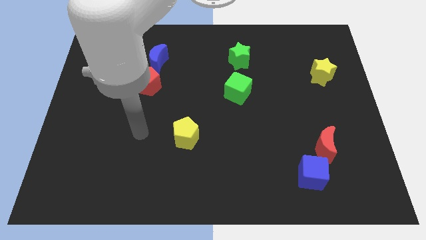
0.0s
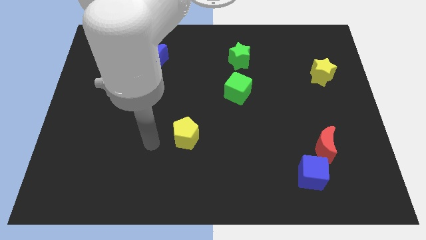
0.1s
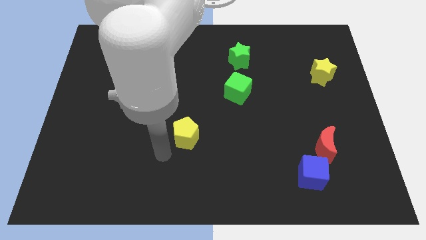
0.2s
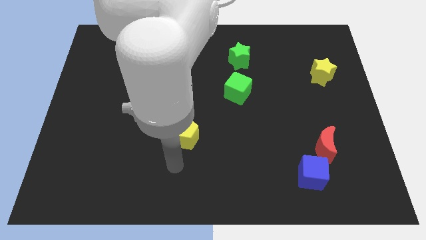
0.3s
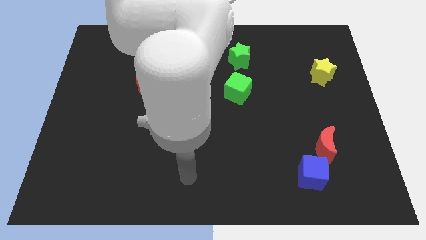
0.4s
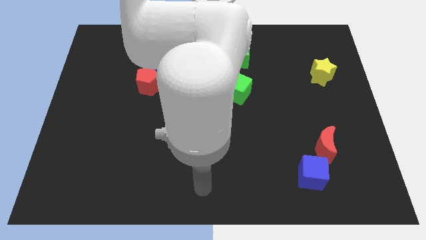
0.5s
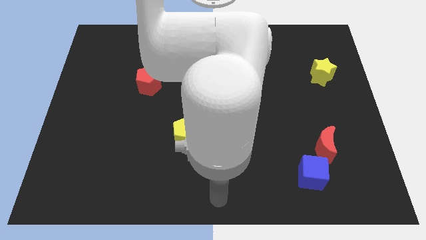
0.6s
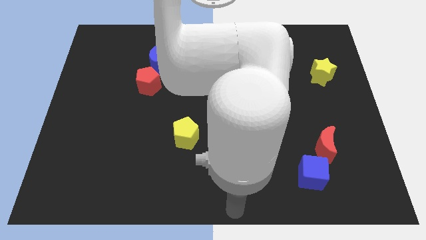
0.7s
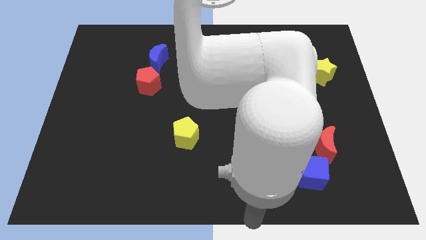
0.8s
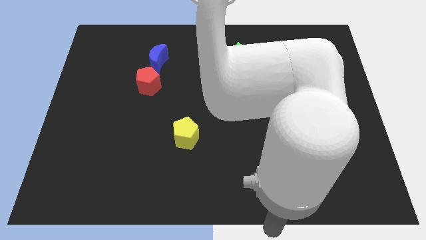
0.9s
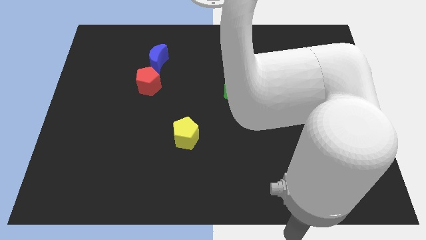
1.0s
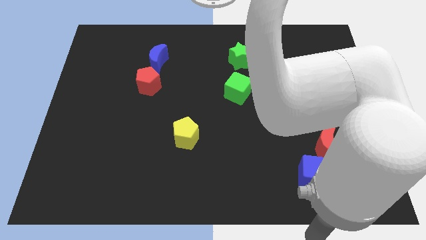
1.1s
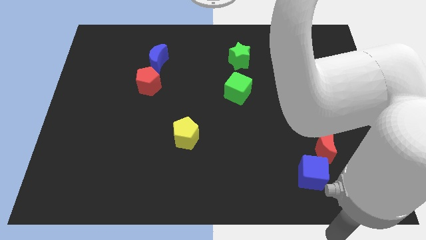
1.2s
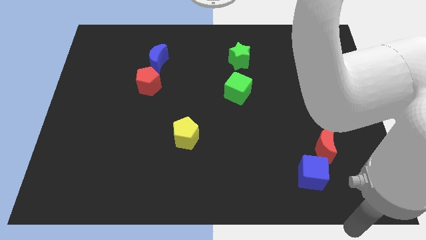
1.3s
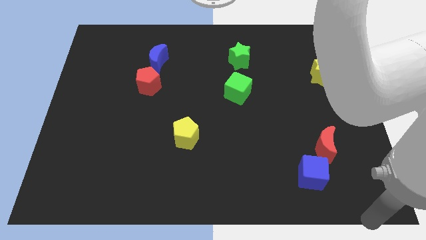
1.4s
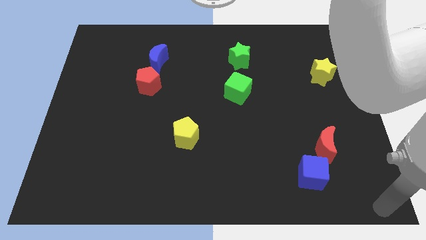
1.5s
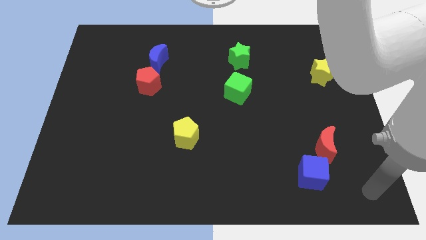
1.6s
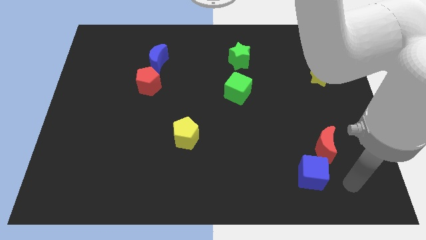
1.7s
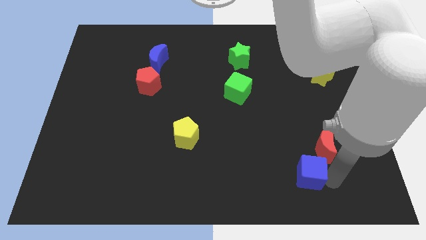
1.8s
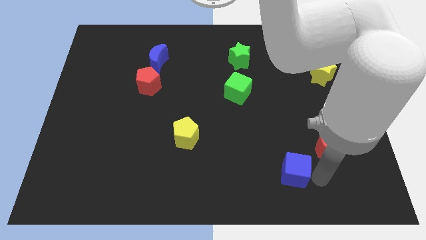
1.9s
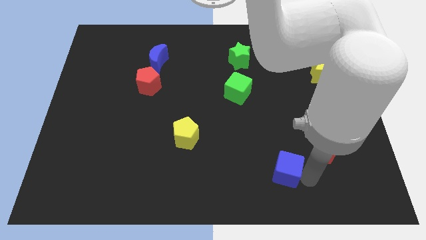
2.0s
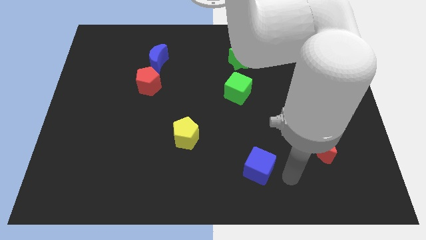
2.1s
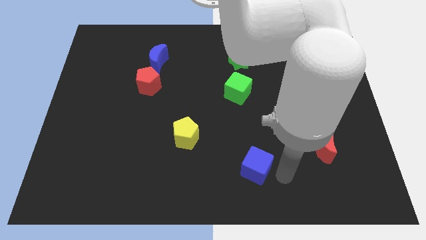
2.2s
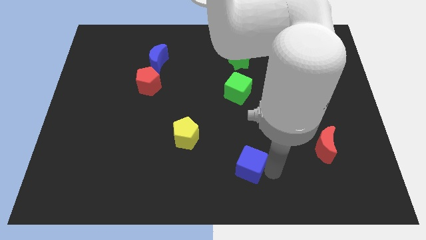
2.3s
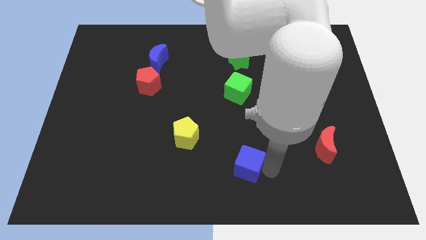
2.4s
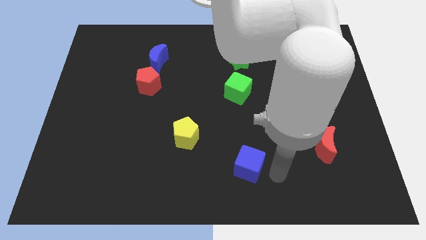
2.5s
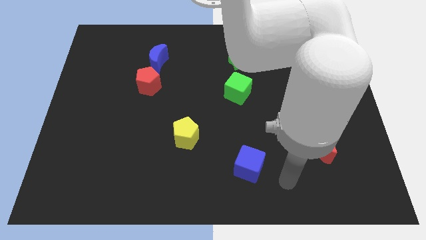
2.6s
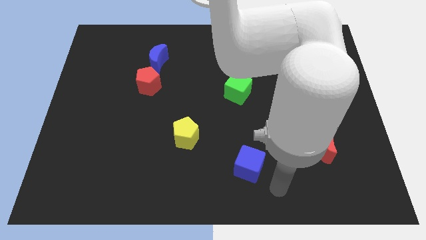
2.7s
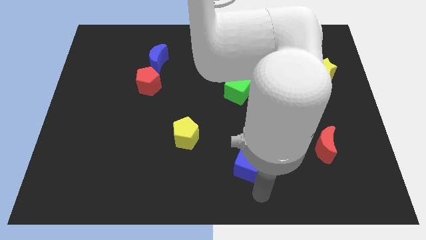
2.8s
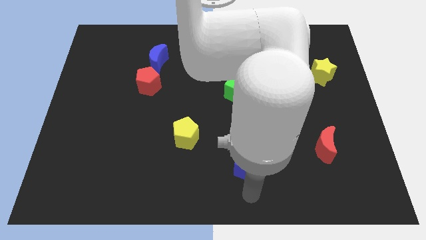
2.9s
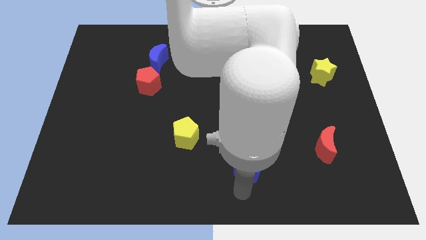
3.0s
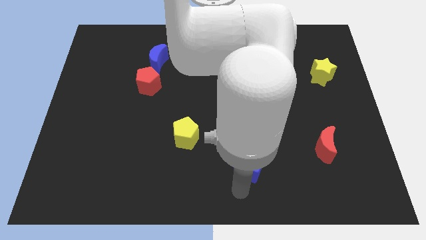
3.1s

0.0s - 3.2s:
place the blue cube vertically below the green cube

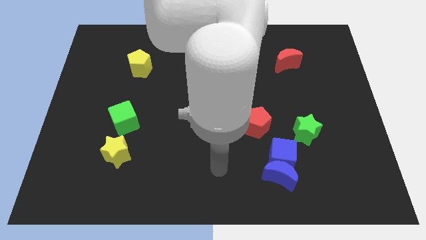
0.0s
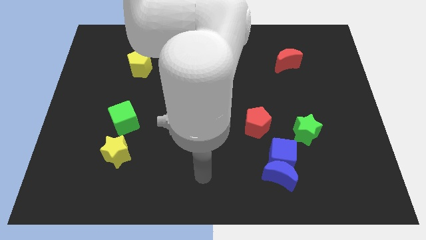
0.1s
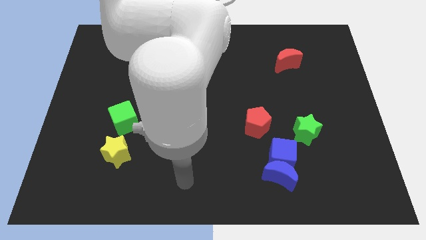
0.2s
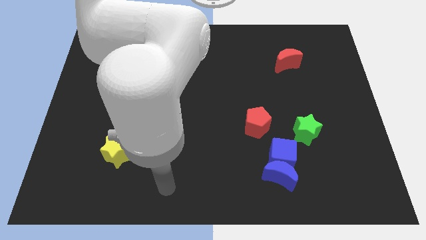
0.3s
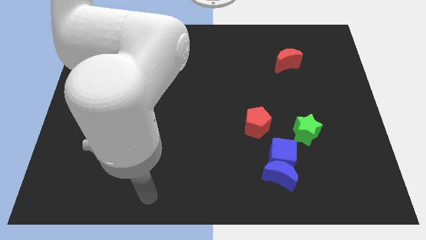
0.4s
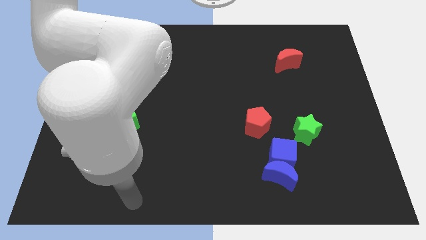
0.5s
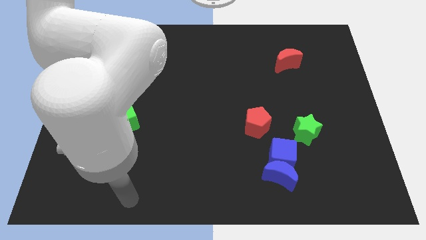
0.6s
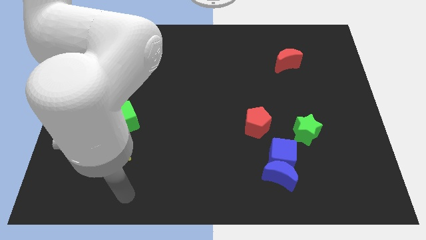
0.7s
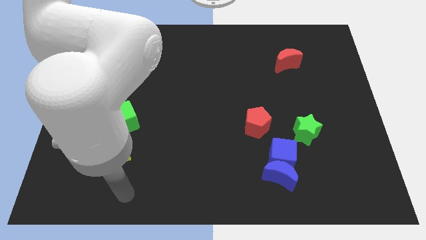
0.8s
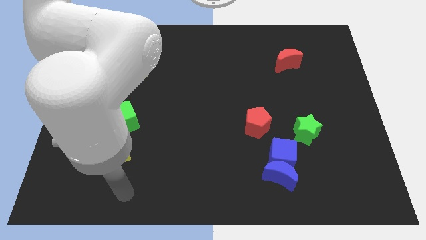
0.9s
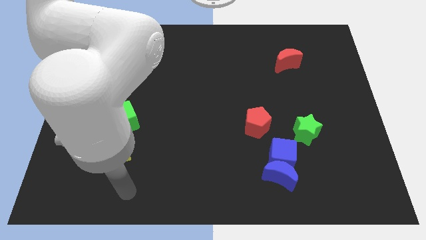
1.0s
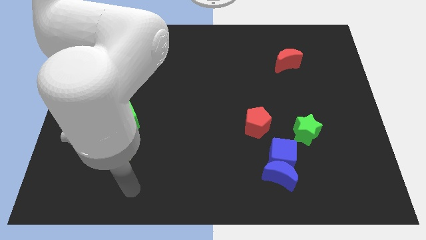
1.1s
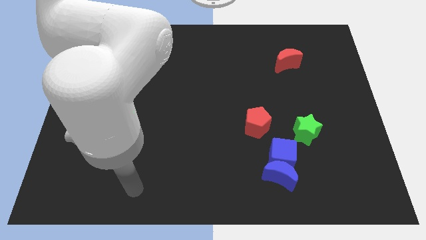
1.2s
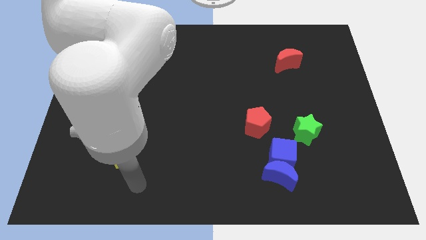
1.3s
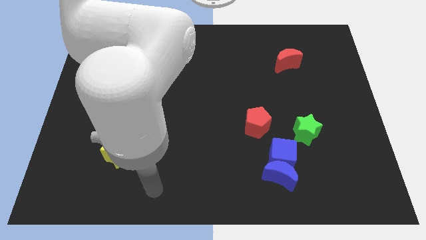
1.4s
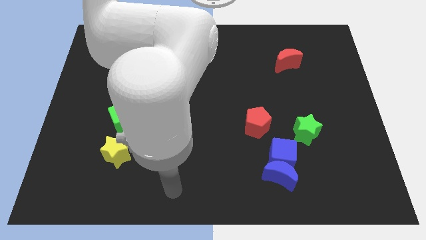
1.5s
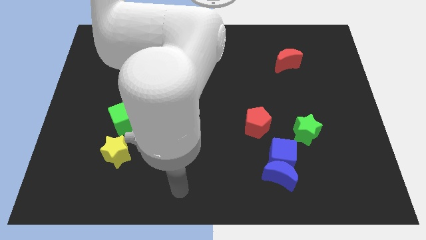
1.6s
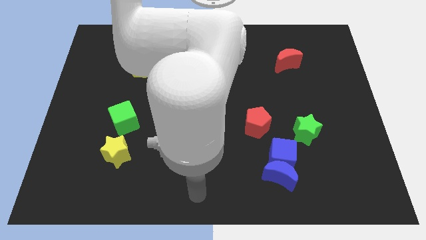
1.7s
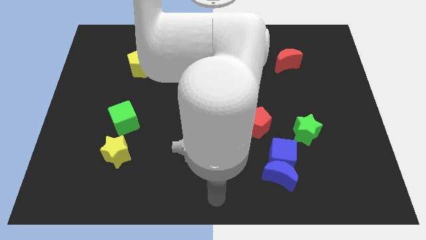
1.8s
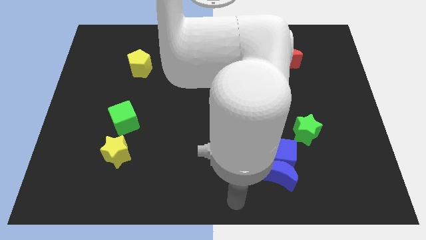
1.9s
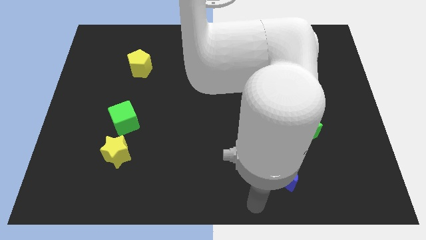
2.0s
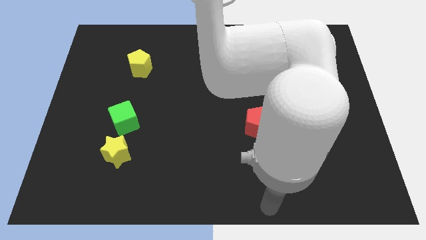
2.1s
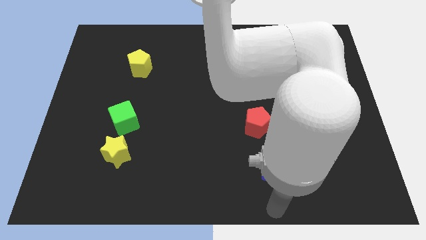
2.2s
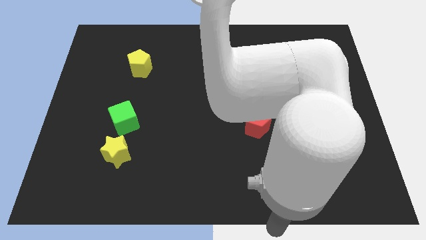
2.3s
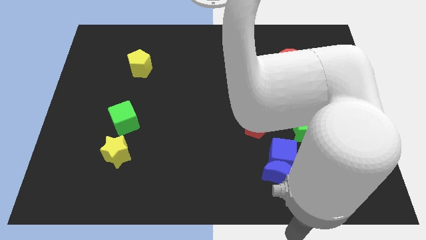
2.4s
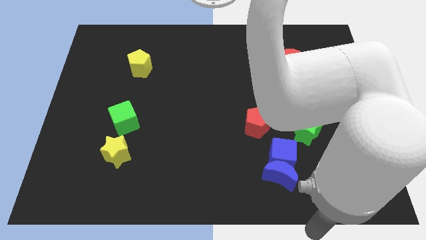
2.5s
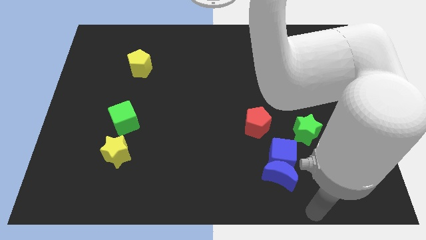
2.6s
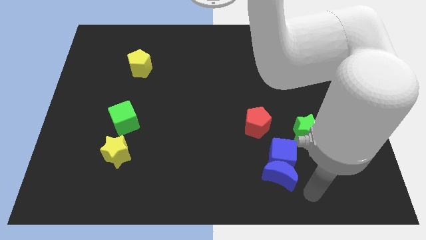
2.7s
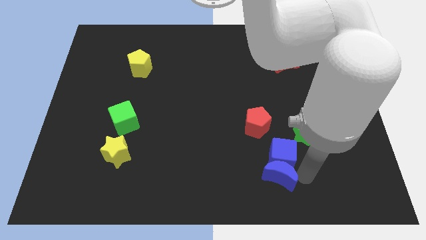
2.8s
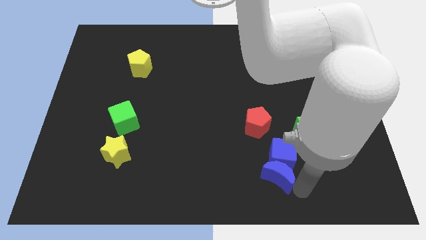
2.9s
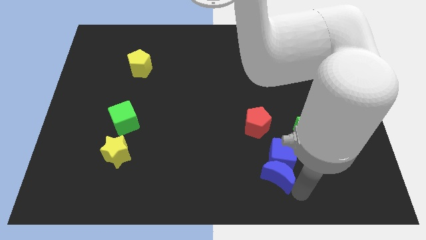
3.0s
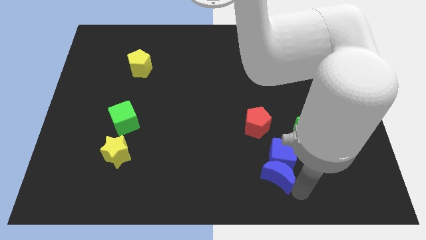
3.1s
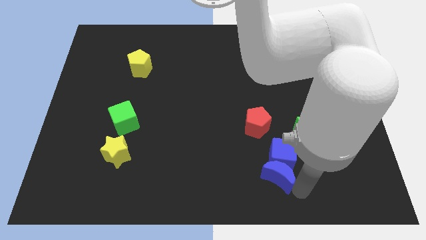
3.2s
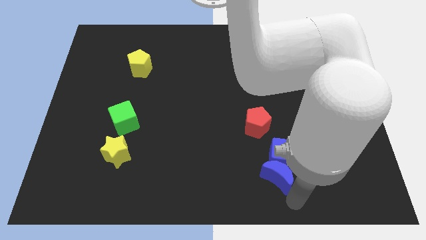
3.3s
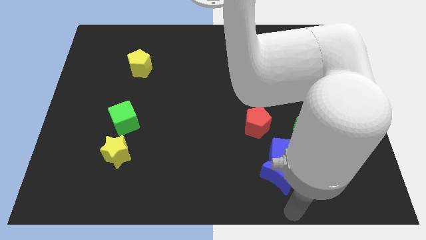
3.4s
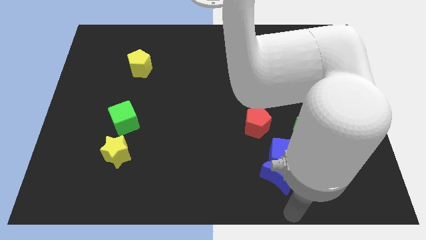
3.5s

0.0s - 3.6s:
slightly touch right to the blue moon

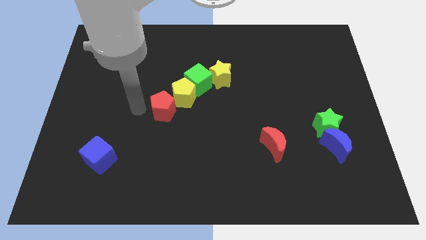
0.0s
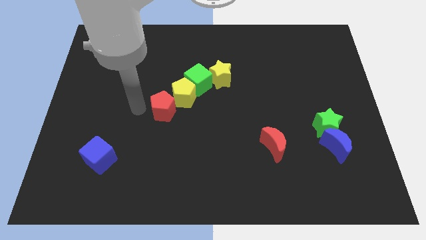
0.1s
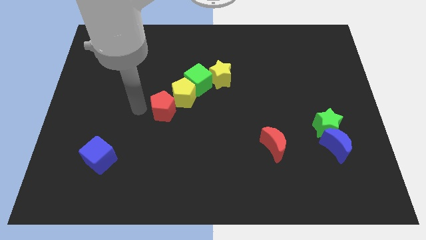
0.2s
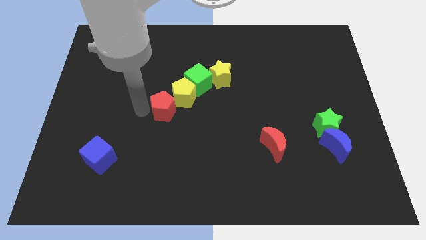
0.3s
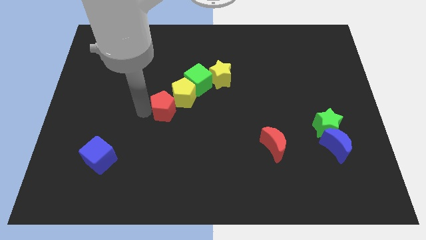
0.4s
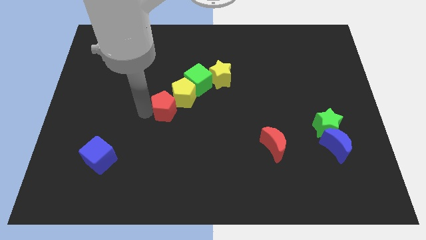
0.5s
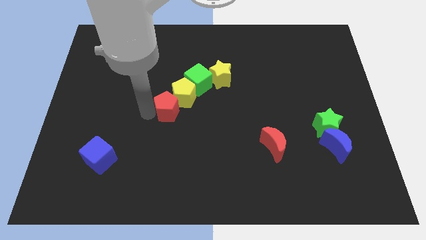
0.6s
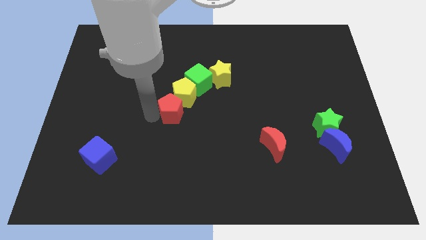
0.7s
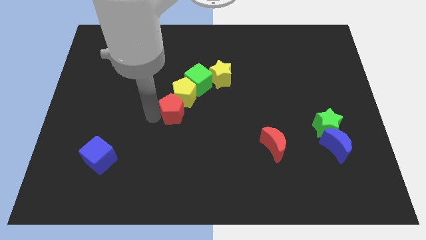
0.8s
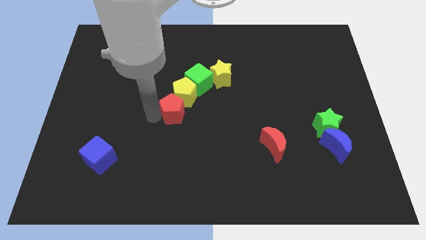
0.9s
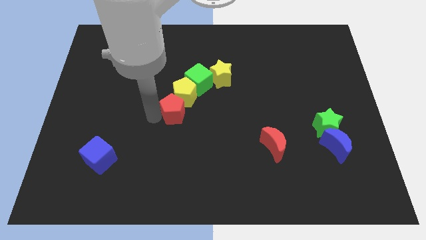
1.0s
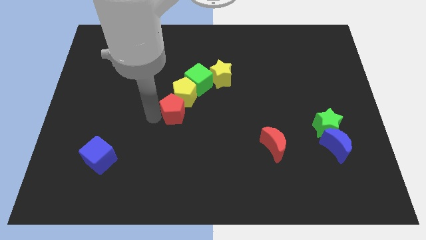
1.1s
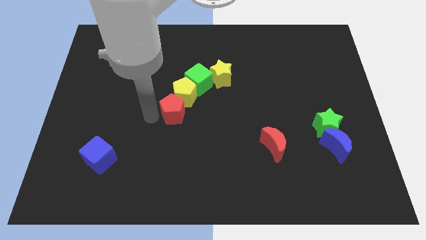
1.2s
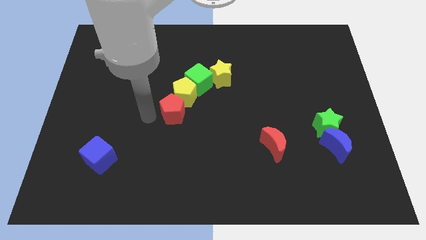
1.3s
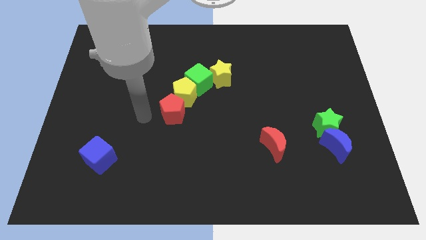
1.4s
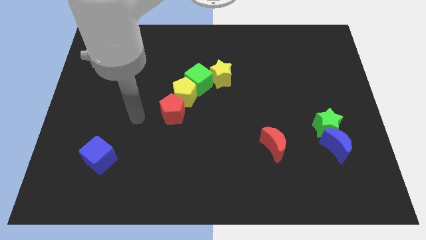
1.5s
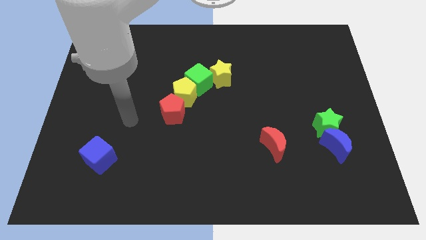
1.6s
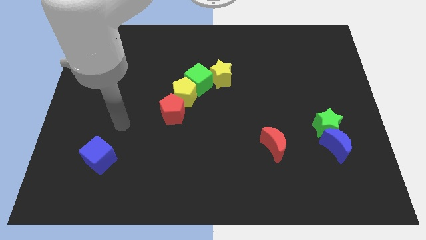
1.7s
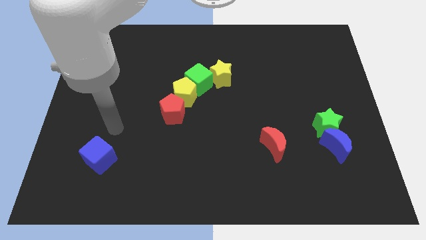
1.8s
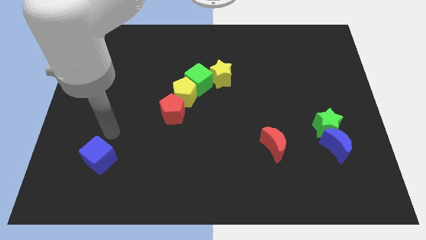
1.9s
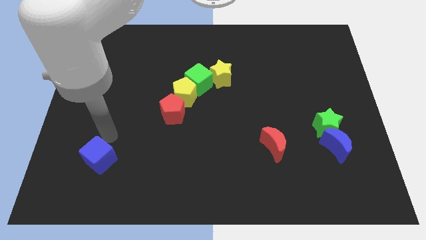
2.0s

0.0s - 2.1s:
place the red pentagon below the yellow pentagon

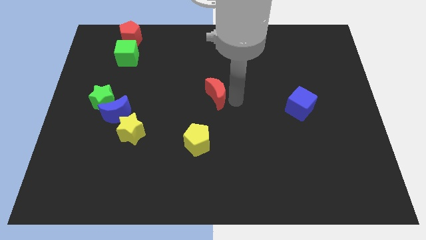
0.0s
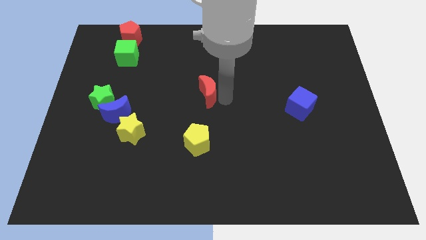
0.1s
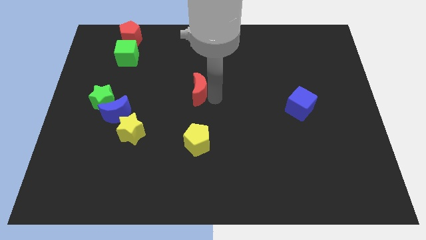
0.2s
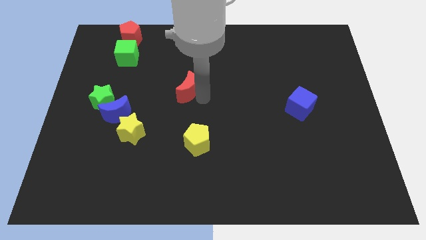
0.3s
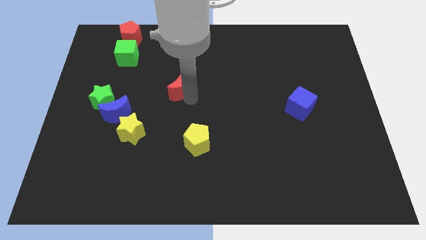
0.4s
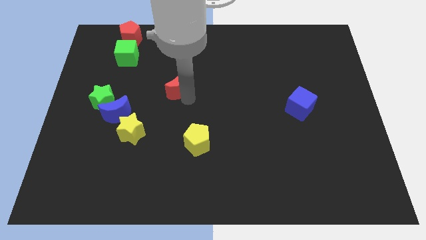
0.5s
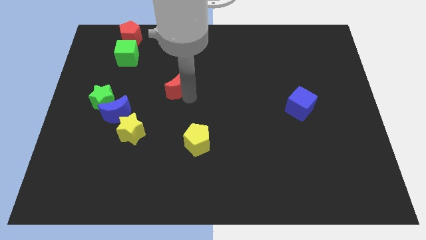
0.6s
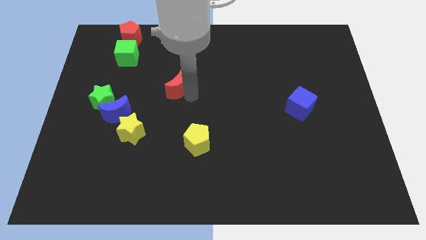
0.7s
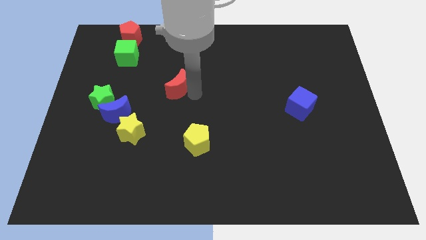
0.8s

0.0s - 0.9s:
move the red crescent slightly left
